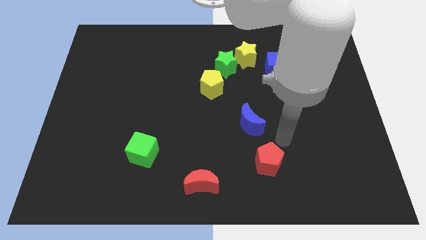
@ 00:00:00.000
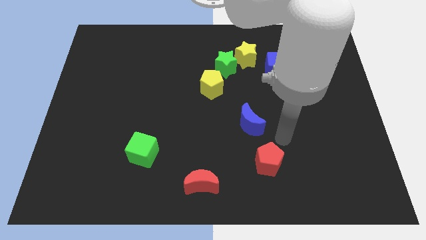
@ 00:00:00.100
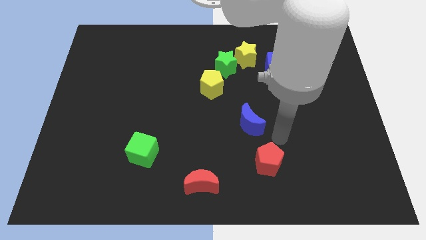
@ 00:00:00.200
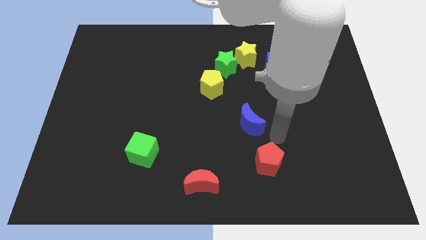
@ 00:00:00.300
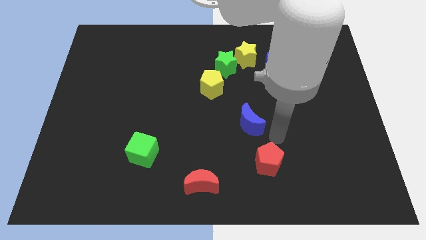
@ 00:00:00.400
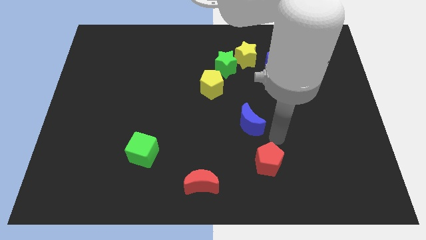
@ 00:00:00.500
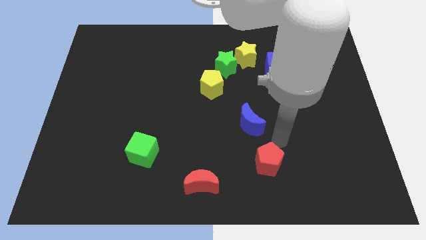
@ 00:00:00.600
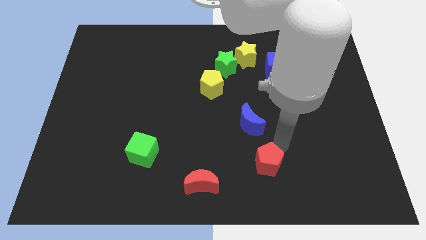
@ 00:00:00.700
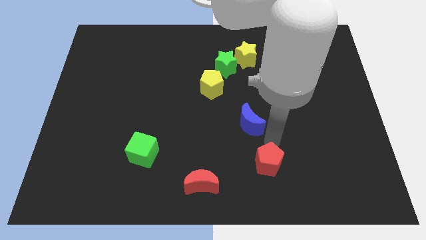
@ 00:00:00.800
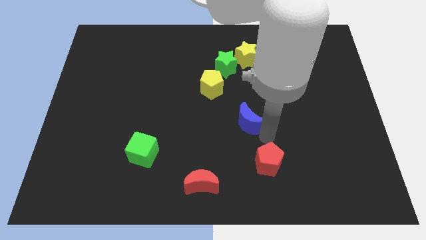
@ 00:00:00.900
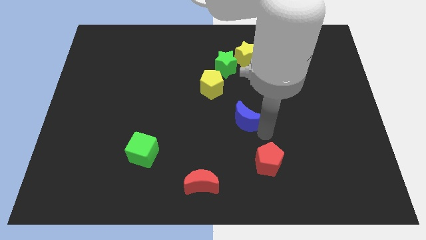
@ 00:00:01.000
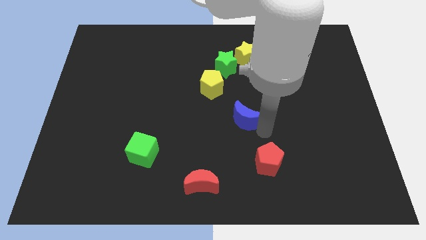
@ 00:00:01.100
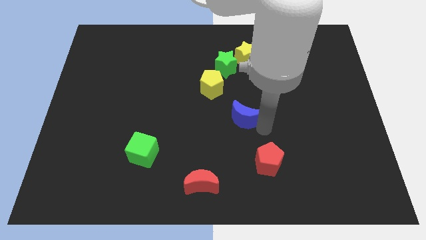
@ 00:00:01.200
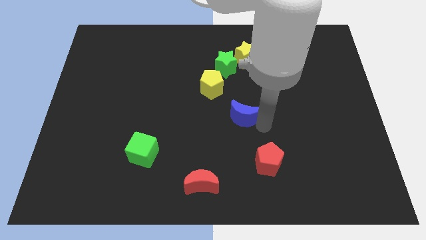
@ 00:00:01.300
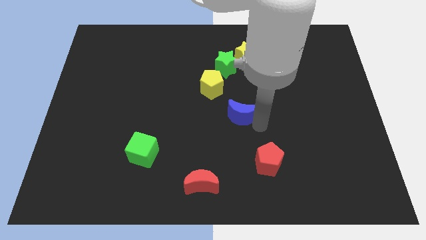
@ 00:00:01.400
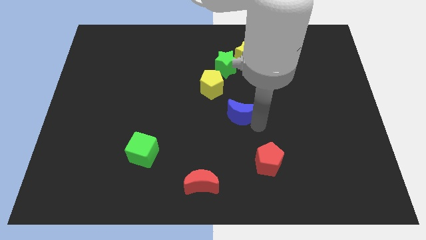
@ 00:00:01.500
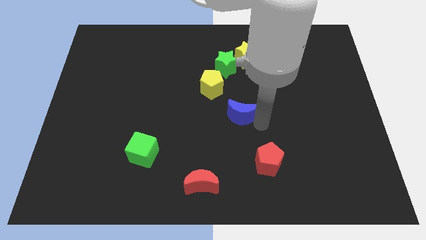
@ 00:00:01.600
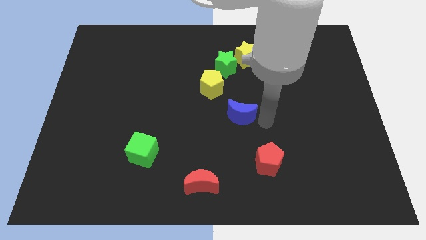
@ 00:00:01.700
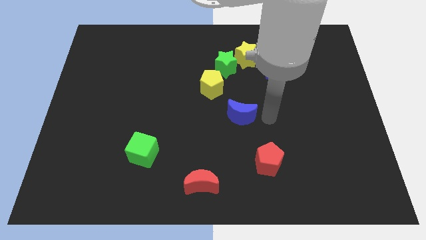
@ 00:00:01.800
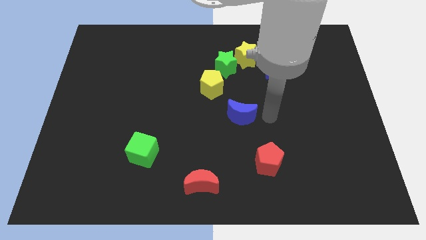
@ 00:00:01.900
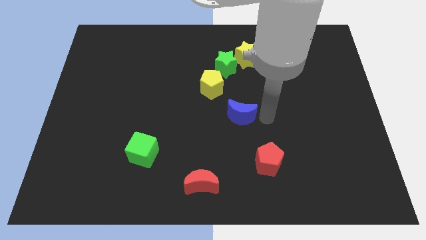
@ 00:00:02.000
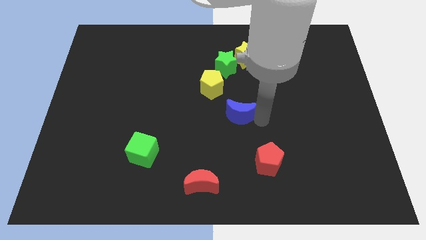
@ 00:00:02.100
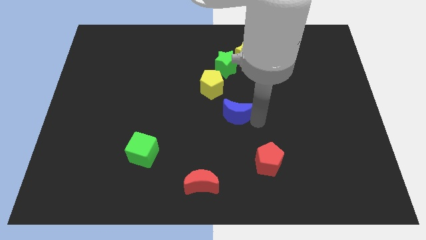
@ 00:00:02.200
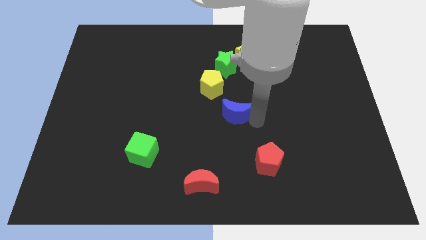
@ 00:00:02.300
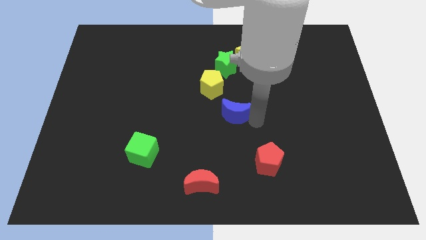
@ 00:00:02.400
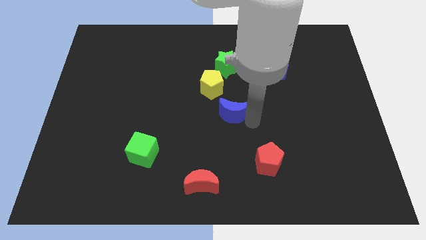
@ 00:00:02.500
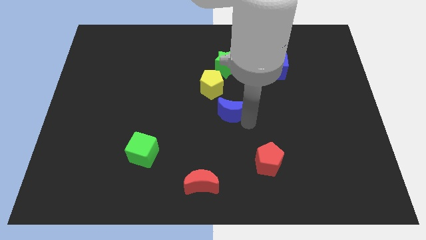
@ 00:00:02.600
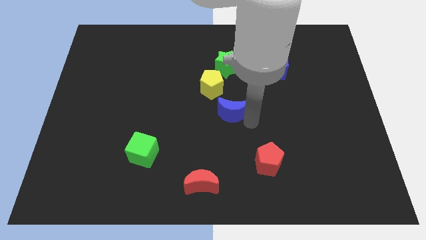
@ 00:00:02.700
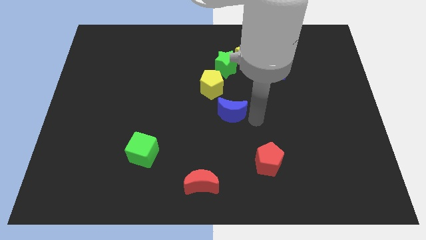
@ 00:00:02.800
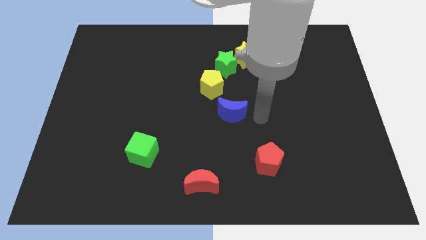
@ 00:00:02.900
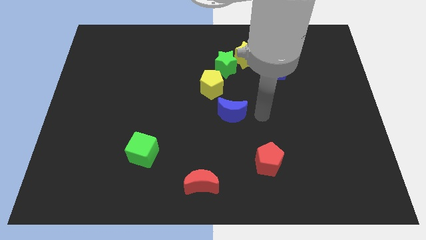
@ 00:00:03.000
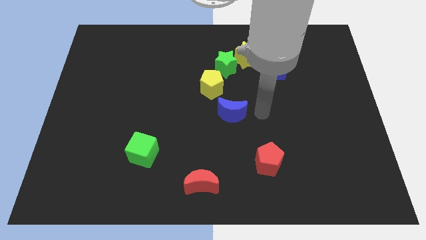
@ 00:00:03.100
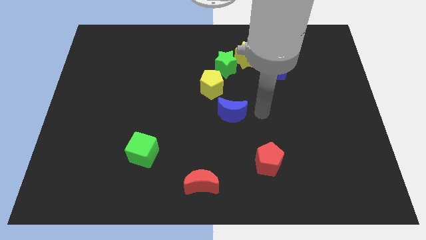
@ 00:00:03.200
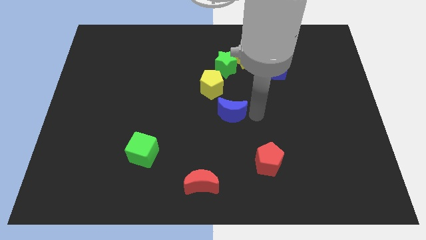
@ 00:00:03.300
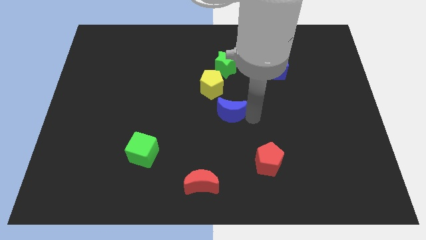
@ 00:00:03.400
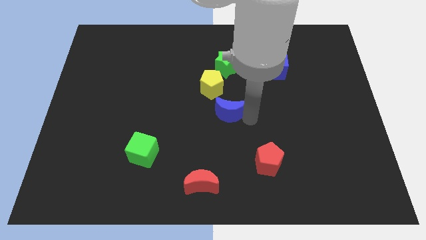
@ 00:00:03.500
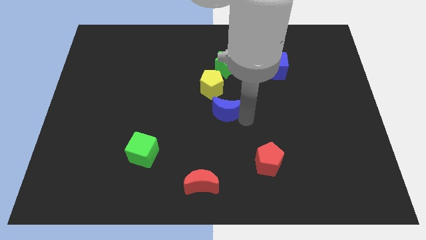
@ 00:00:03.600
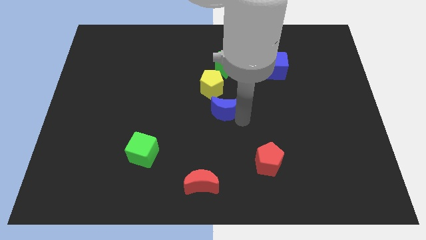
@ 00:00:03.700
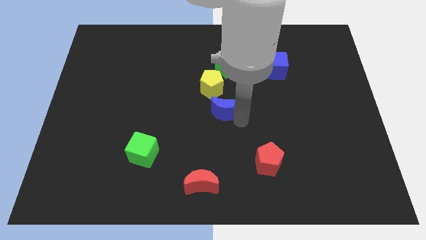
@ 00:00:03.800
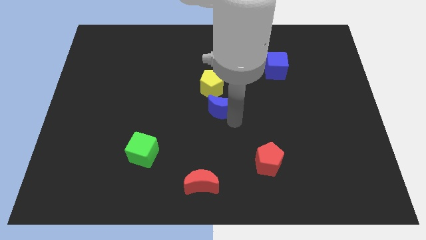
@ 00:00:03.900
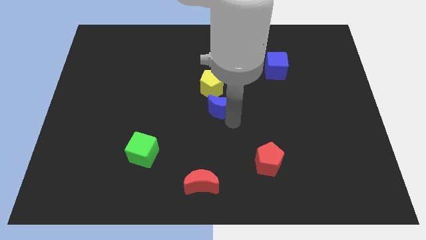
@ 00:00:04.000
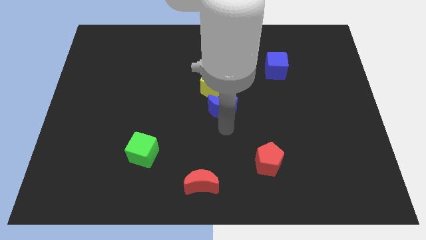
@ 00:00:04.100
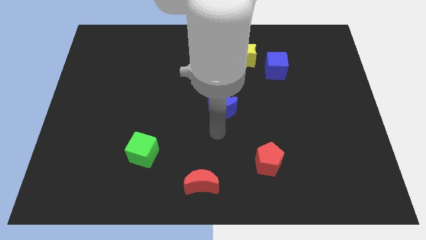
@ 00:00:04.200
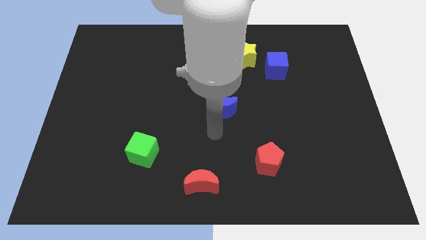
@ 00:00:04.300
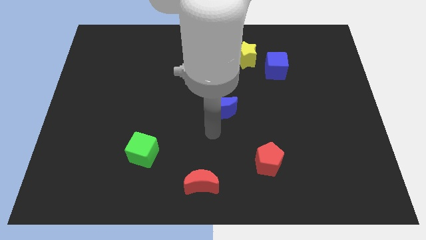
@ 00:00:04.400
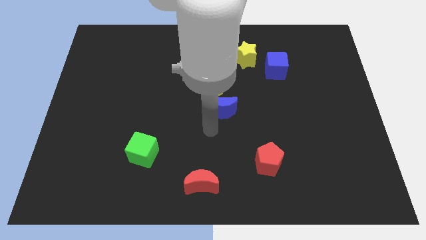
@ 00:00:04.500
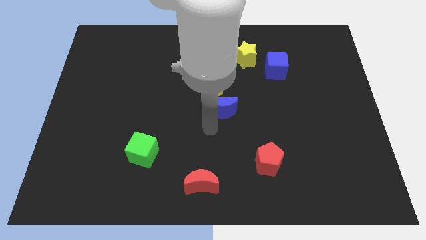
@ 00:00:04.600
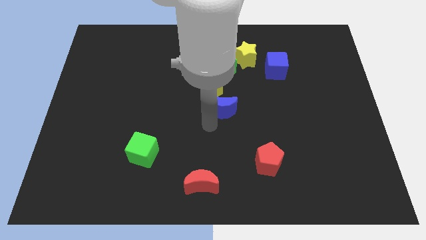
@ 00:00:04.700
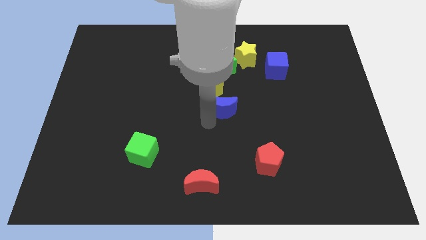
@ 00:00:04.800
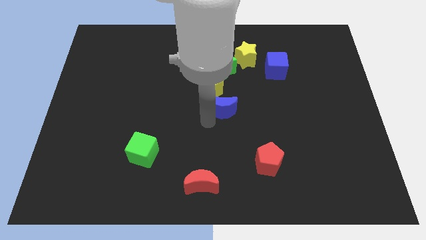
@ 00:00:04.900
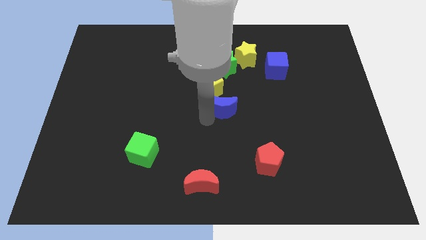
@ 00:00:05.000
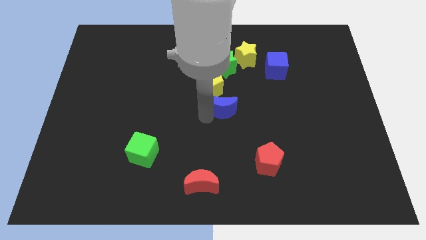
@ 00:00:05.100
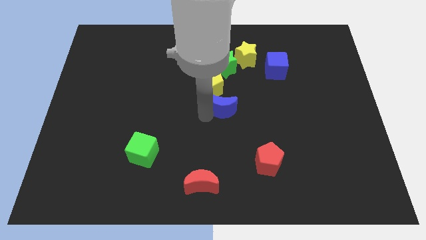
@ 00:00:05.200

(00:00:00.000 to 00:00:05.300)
move blue moon below the yellow pentagon

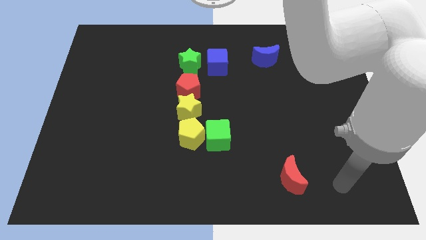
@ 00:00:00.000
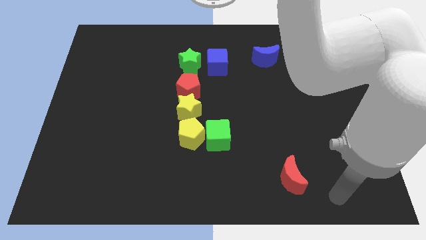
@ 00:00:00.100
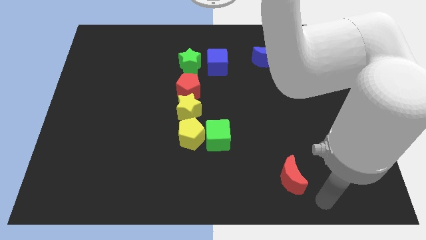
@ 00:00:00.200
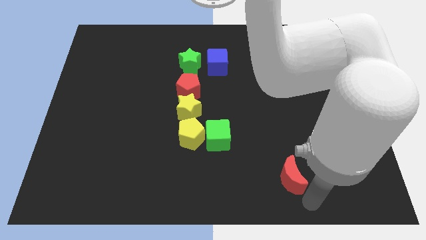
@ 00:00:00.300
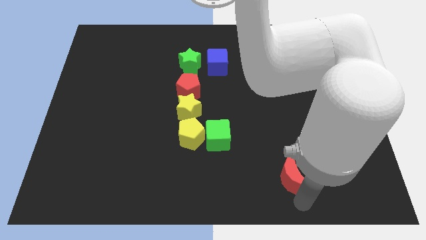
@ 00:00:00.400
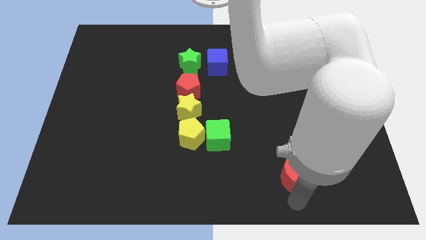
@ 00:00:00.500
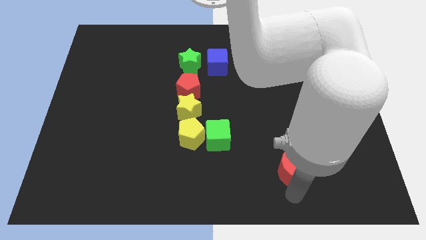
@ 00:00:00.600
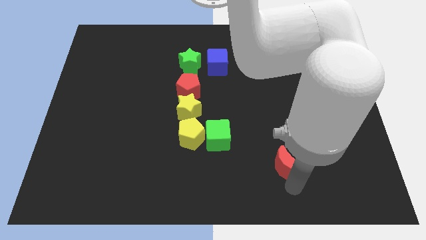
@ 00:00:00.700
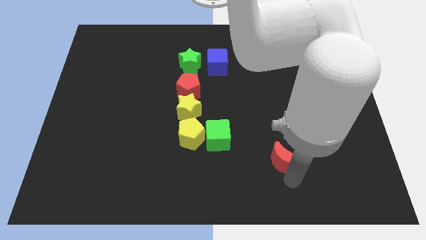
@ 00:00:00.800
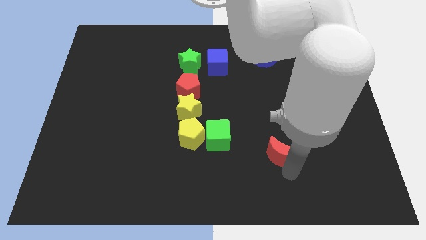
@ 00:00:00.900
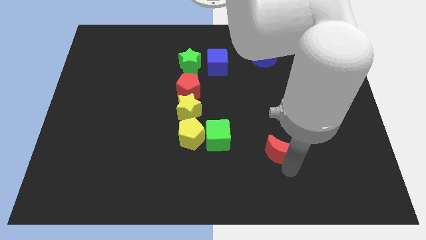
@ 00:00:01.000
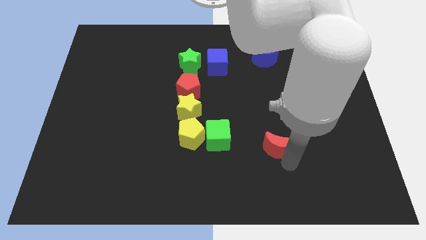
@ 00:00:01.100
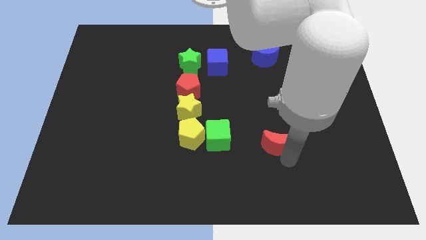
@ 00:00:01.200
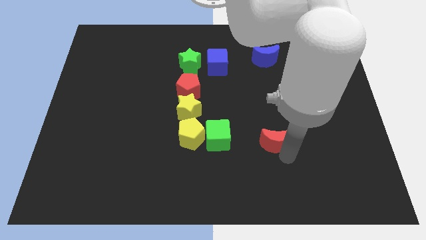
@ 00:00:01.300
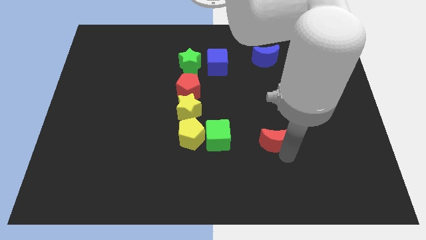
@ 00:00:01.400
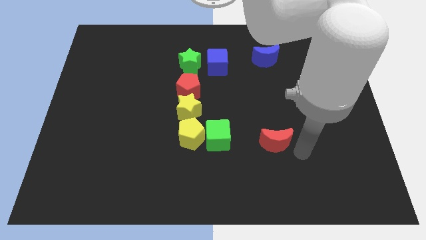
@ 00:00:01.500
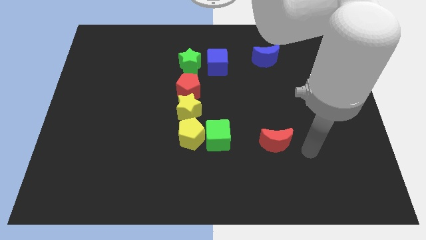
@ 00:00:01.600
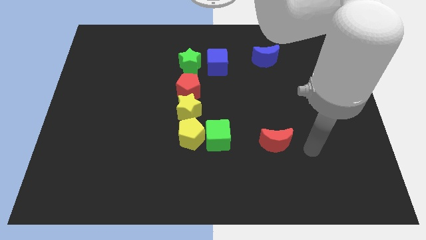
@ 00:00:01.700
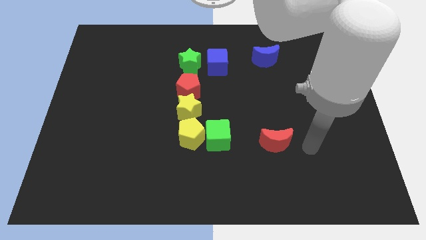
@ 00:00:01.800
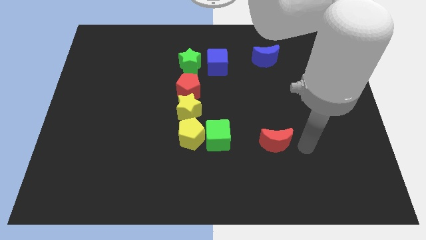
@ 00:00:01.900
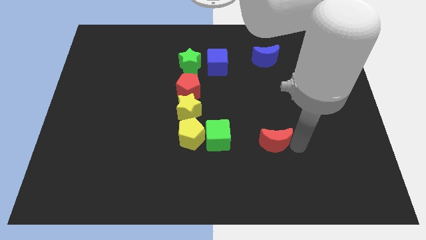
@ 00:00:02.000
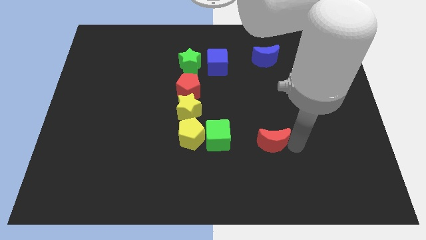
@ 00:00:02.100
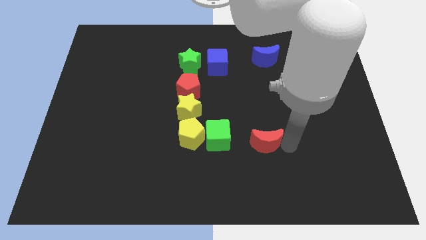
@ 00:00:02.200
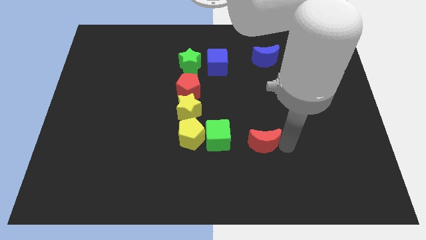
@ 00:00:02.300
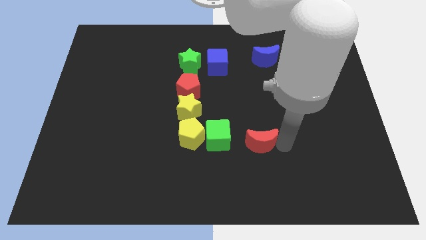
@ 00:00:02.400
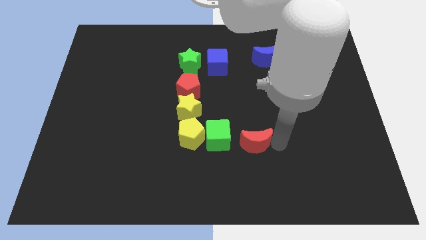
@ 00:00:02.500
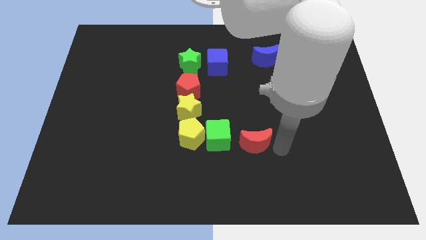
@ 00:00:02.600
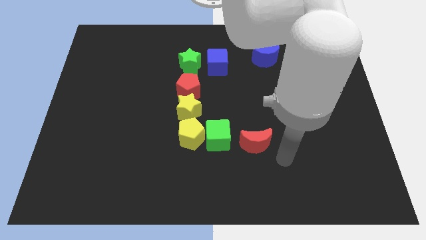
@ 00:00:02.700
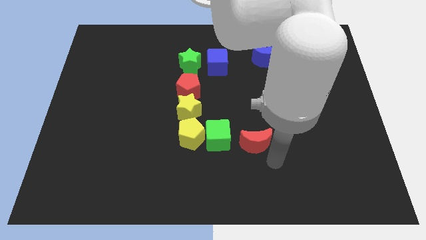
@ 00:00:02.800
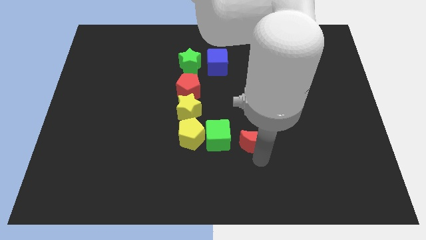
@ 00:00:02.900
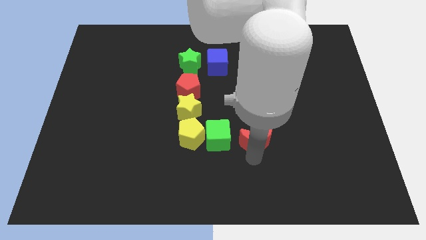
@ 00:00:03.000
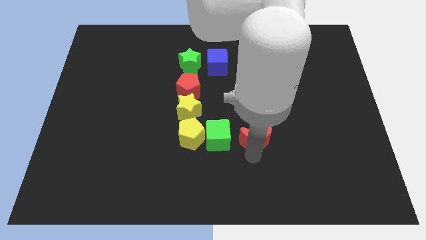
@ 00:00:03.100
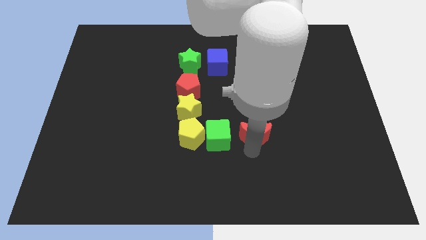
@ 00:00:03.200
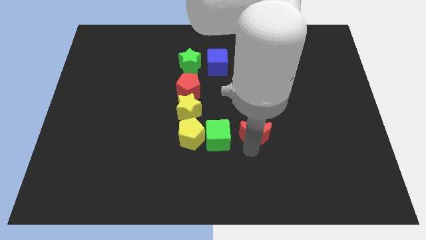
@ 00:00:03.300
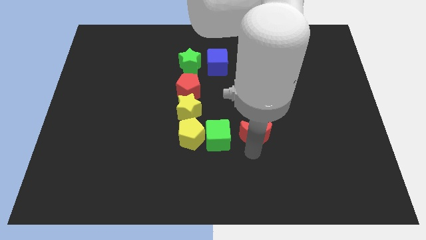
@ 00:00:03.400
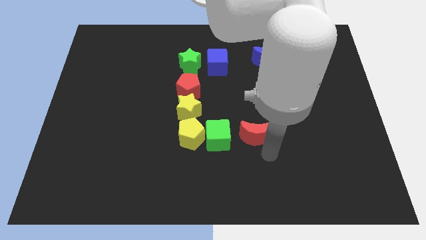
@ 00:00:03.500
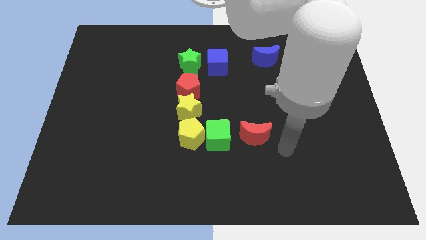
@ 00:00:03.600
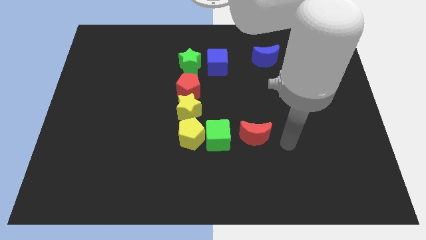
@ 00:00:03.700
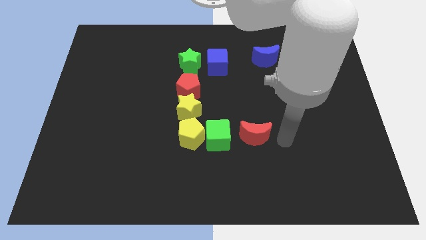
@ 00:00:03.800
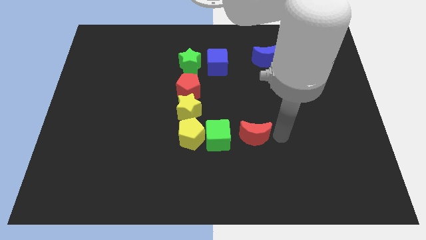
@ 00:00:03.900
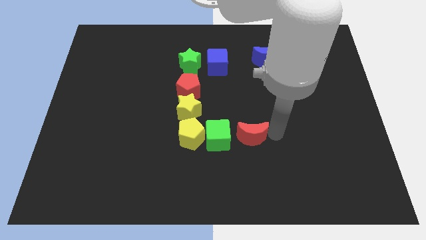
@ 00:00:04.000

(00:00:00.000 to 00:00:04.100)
move red moon to the right of green cube
